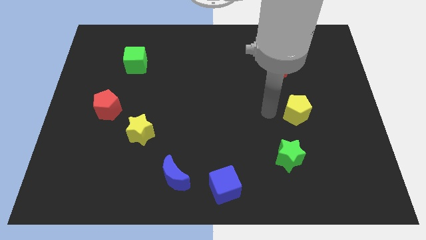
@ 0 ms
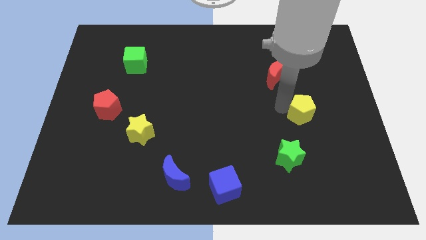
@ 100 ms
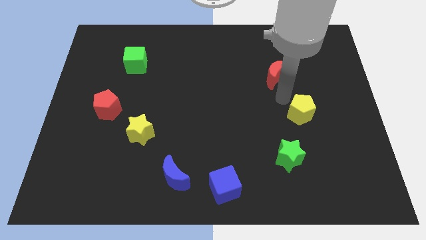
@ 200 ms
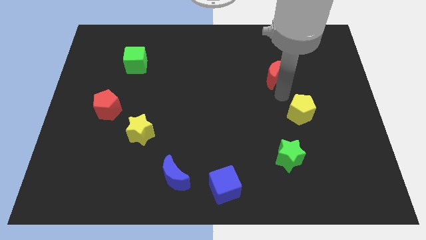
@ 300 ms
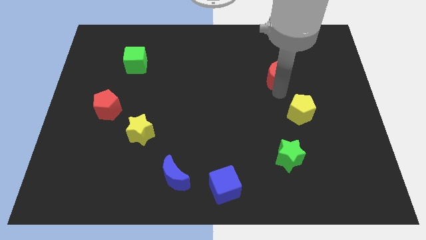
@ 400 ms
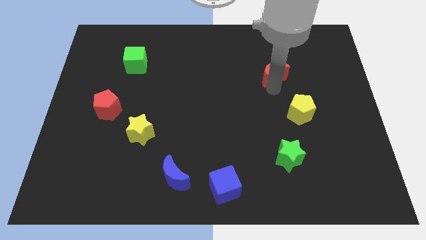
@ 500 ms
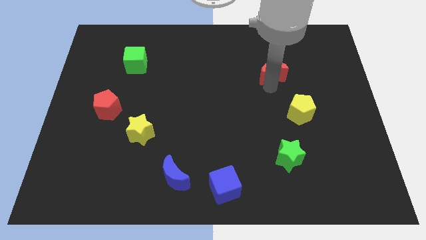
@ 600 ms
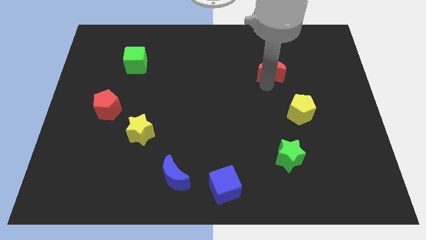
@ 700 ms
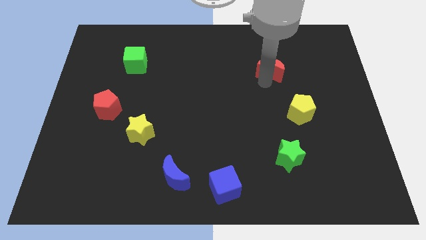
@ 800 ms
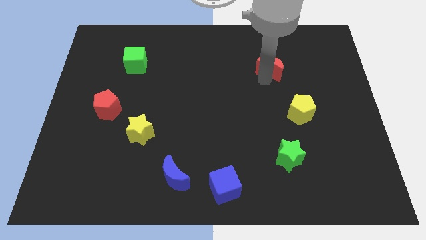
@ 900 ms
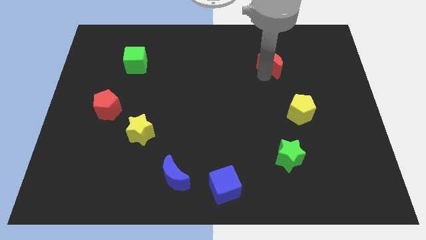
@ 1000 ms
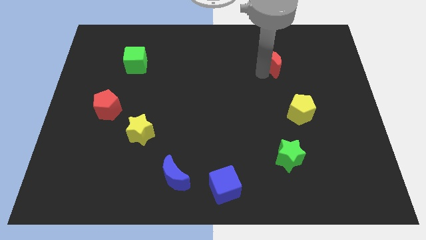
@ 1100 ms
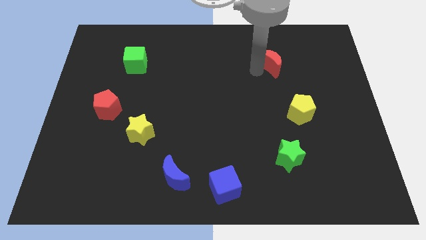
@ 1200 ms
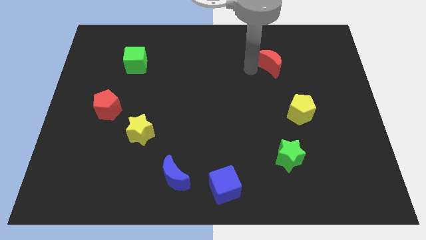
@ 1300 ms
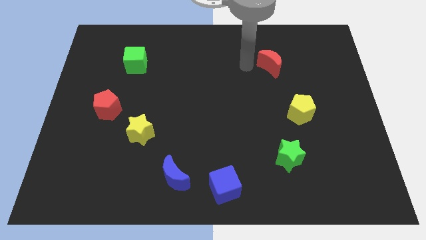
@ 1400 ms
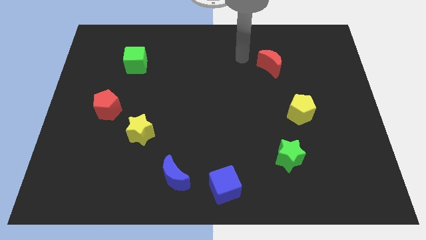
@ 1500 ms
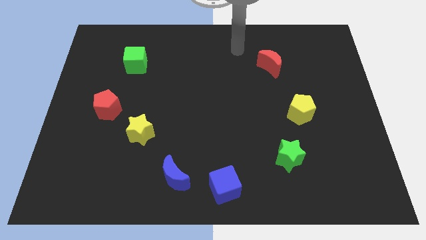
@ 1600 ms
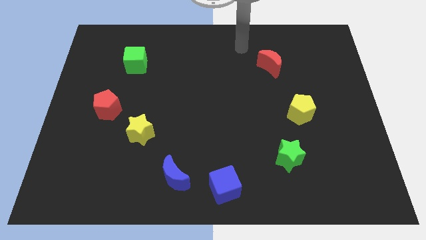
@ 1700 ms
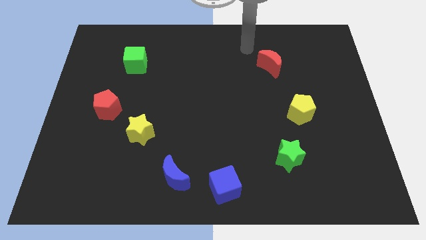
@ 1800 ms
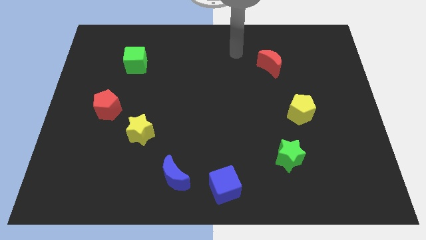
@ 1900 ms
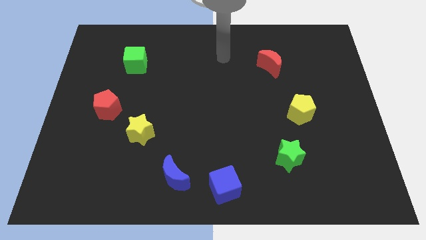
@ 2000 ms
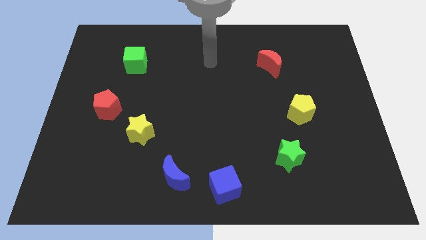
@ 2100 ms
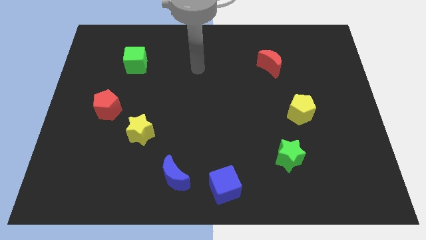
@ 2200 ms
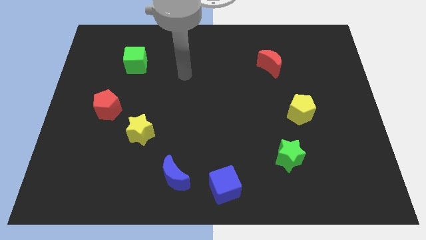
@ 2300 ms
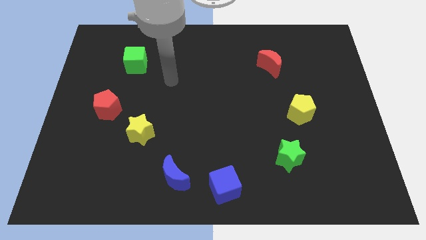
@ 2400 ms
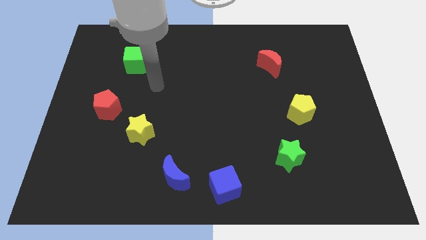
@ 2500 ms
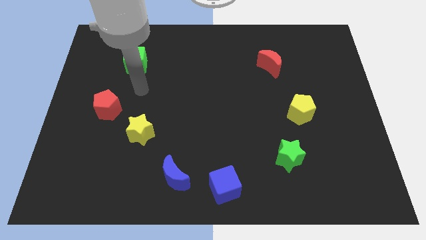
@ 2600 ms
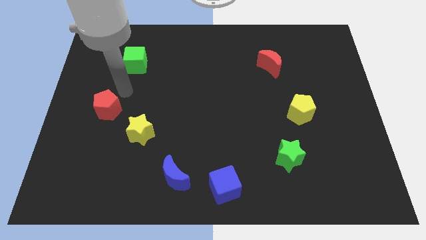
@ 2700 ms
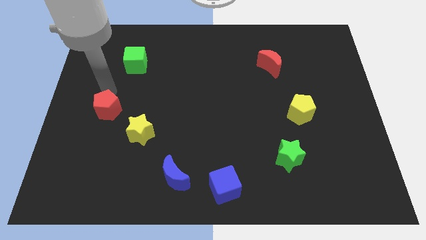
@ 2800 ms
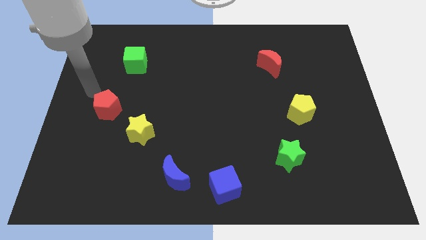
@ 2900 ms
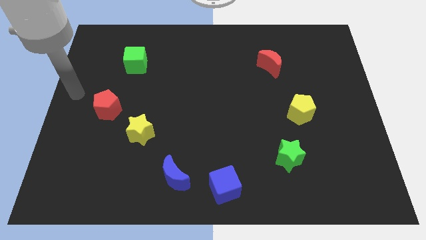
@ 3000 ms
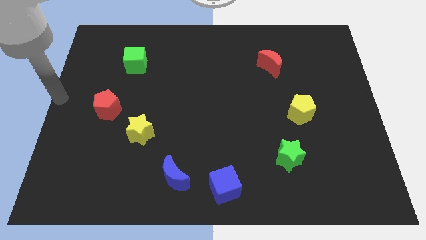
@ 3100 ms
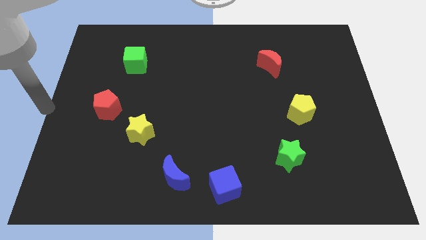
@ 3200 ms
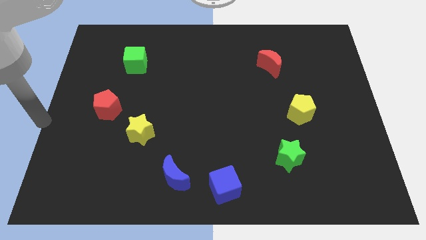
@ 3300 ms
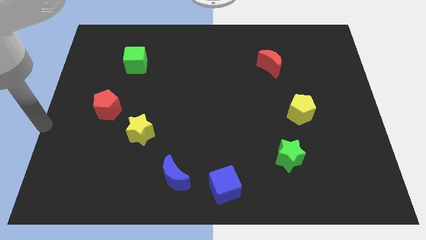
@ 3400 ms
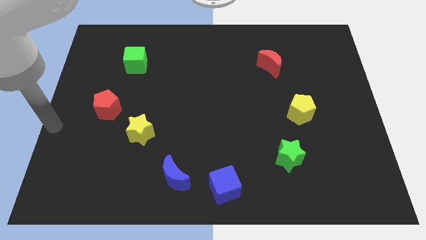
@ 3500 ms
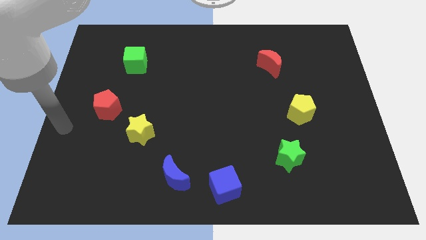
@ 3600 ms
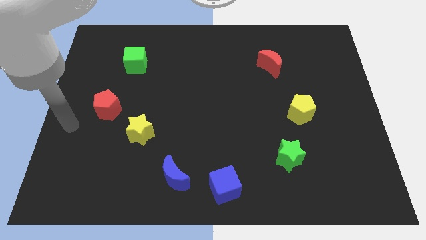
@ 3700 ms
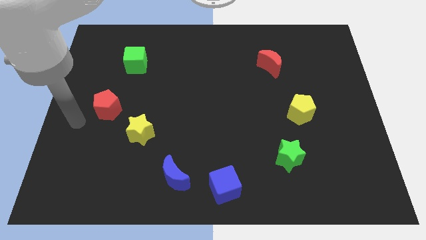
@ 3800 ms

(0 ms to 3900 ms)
slightly move the red crescent towards the top of the board

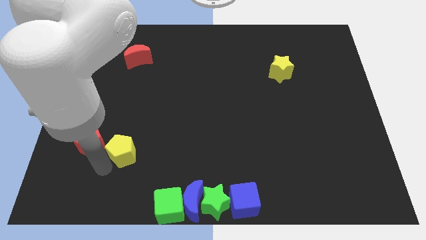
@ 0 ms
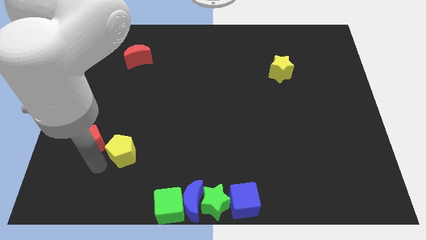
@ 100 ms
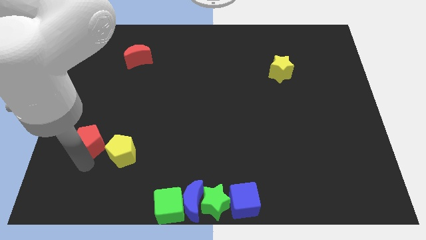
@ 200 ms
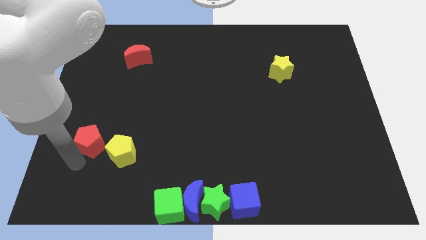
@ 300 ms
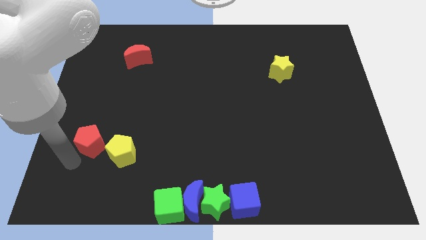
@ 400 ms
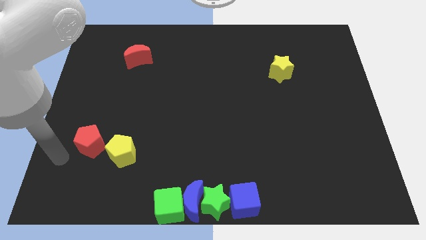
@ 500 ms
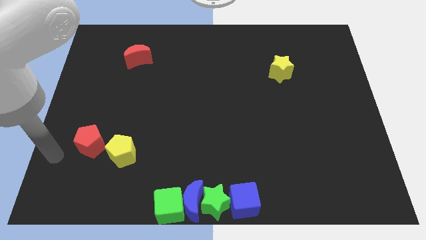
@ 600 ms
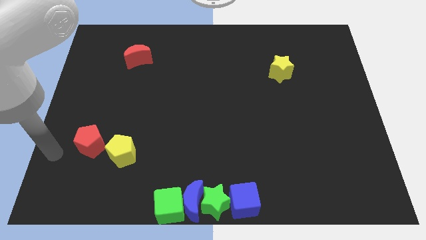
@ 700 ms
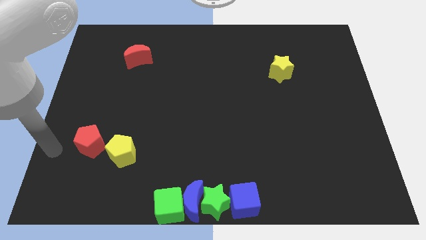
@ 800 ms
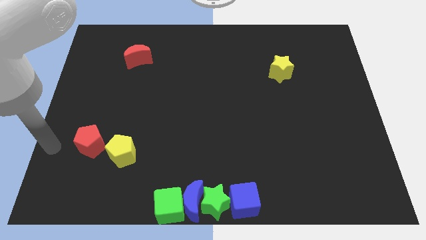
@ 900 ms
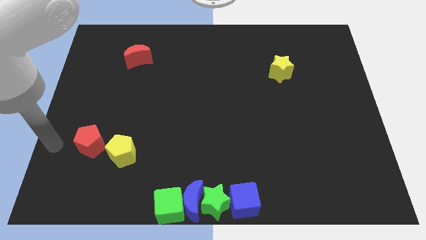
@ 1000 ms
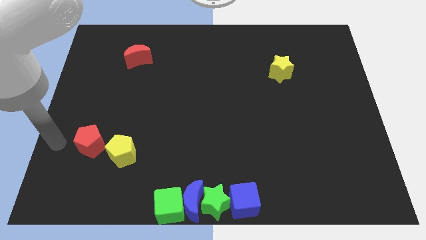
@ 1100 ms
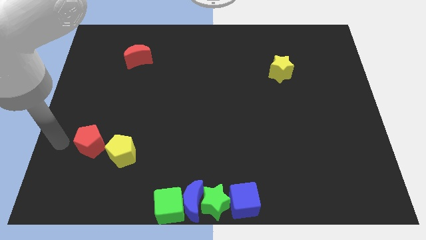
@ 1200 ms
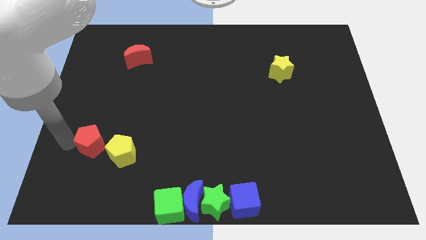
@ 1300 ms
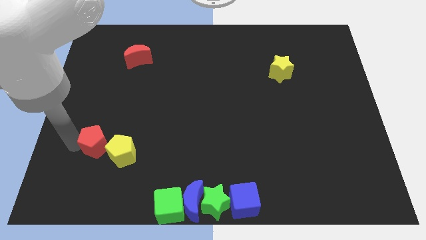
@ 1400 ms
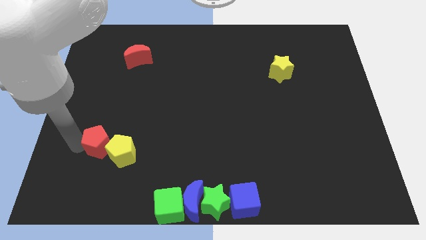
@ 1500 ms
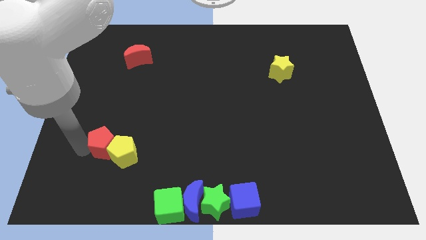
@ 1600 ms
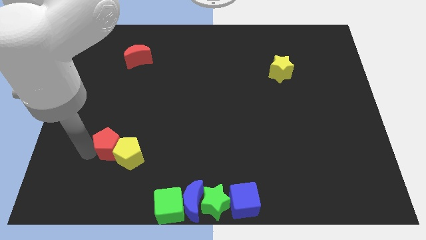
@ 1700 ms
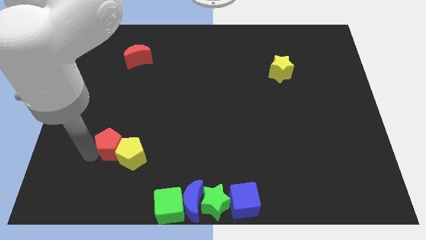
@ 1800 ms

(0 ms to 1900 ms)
push the red pentagon to the left of the yellow pentagon

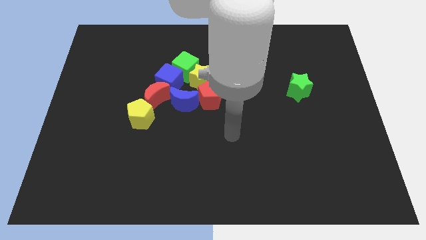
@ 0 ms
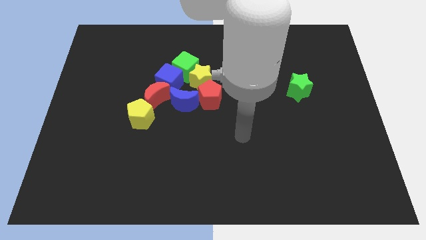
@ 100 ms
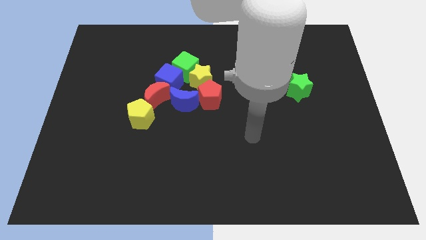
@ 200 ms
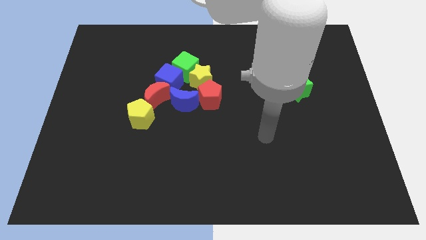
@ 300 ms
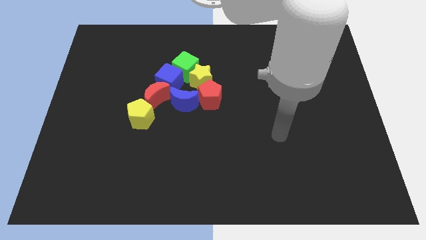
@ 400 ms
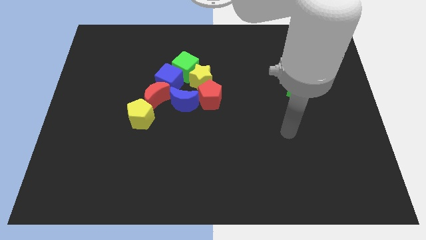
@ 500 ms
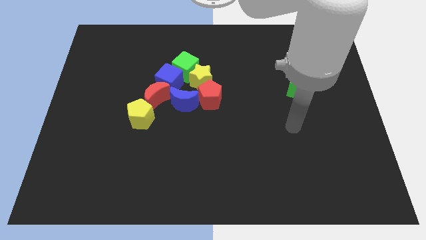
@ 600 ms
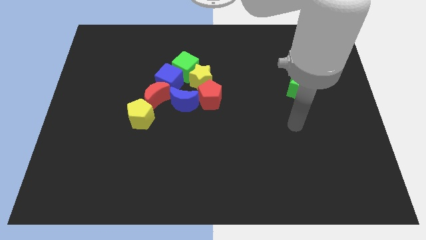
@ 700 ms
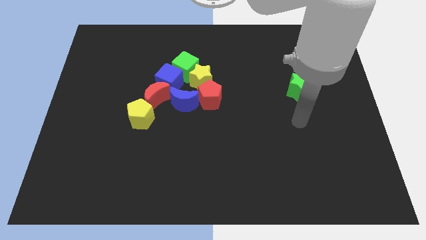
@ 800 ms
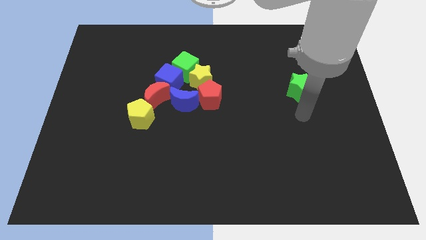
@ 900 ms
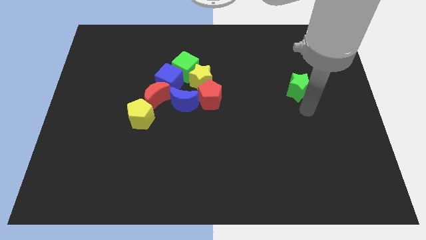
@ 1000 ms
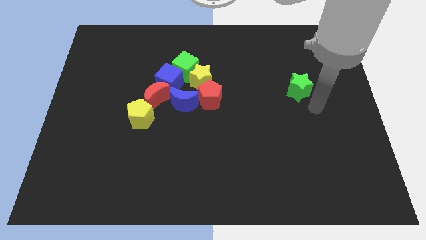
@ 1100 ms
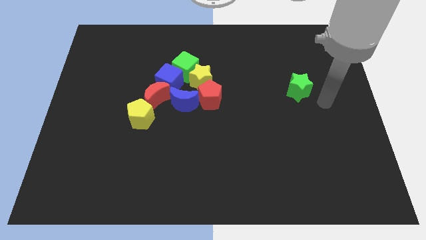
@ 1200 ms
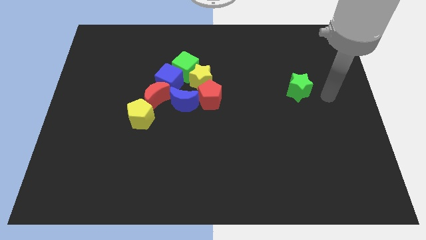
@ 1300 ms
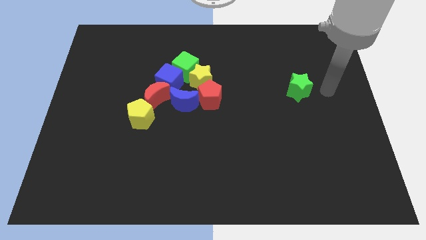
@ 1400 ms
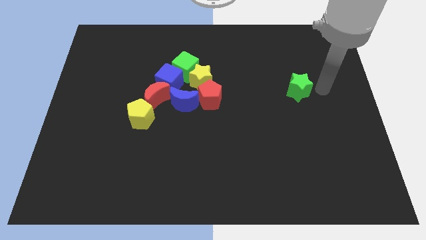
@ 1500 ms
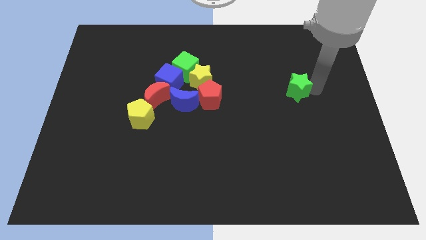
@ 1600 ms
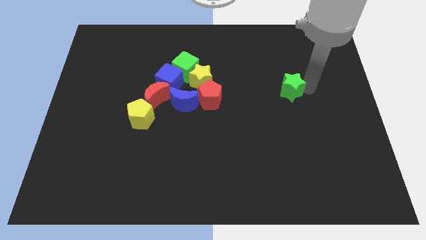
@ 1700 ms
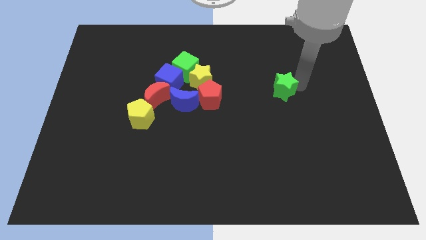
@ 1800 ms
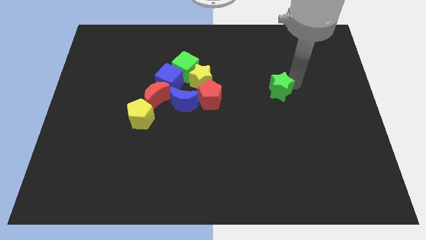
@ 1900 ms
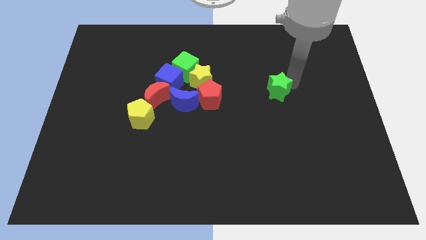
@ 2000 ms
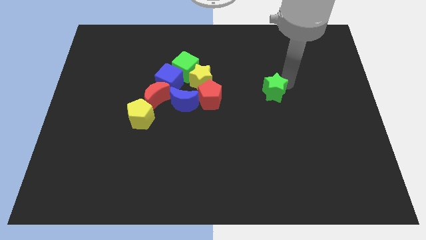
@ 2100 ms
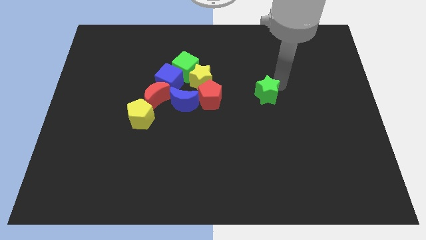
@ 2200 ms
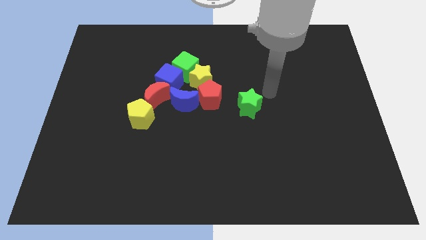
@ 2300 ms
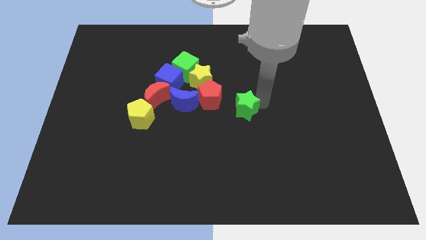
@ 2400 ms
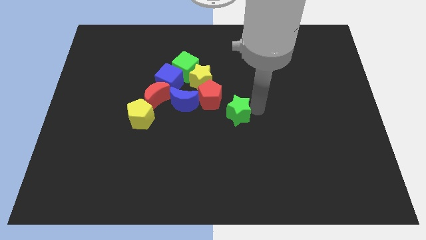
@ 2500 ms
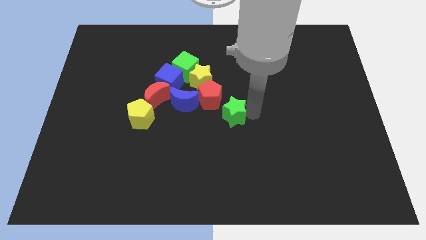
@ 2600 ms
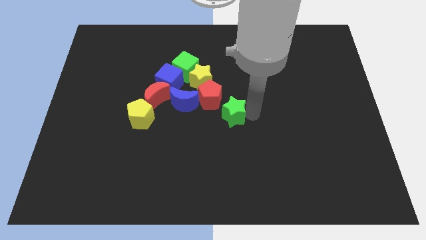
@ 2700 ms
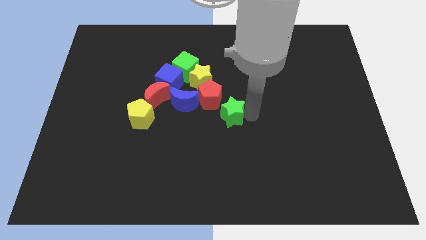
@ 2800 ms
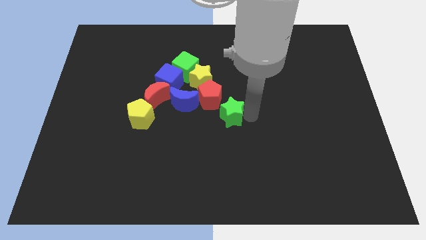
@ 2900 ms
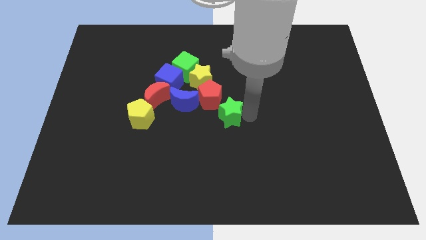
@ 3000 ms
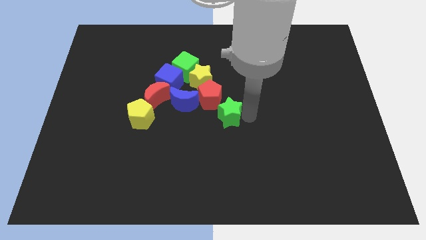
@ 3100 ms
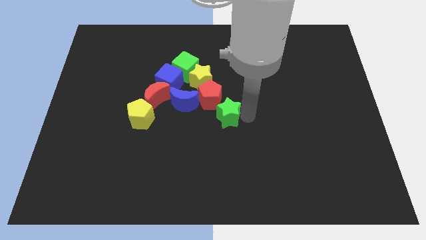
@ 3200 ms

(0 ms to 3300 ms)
push the green star vertical to the bottom of the red pentagon
